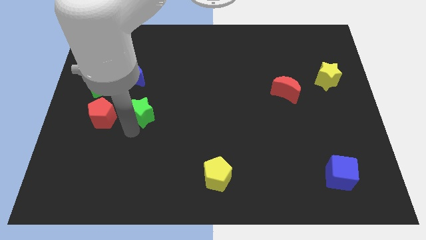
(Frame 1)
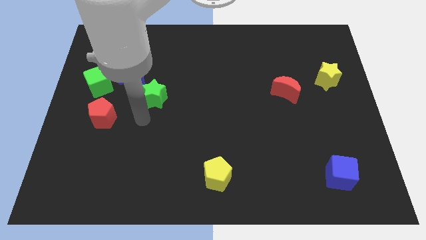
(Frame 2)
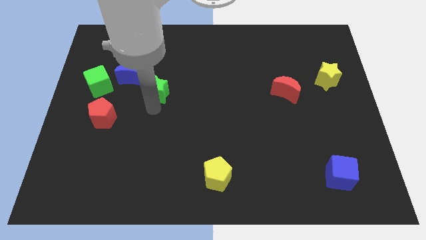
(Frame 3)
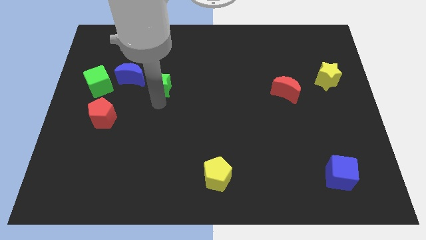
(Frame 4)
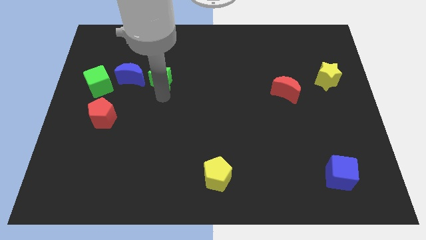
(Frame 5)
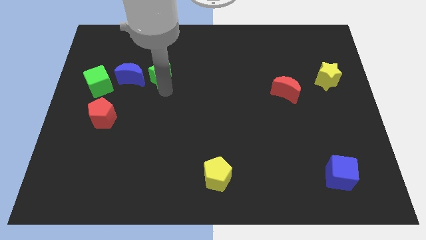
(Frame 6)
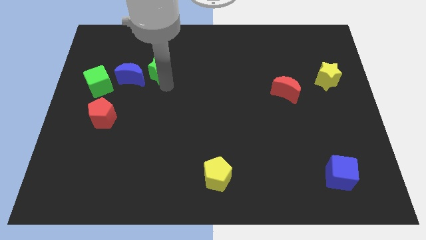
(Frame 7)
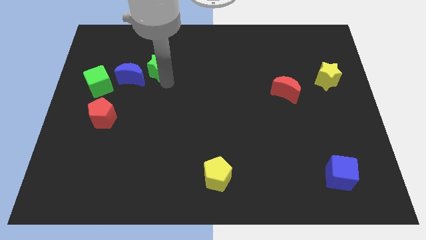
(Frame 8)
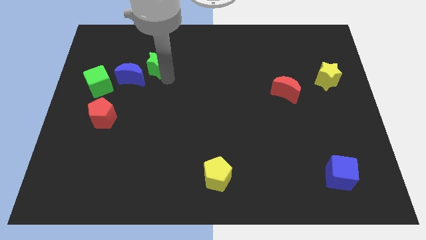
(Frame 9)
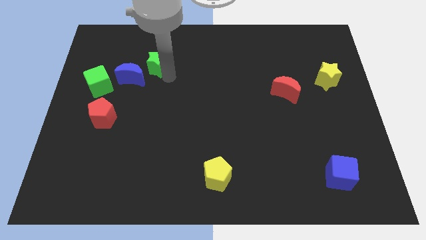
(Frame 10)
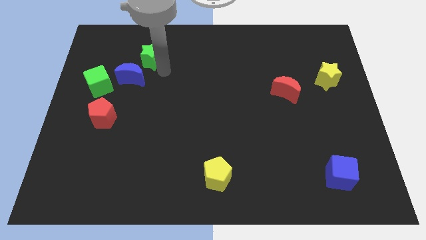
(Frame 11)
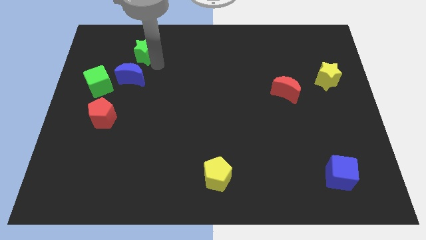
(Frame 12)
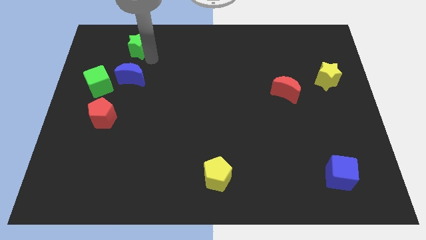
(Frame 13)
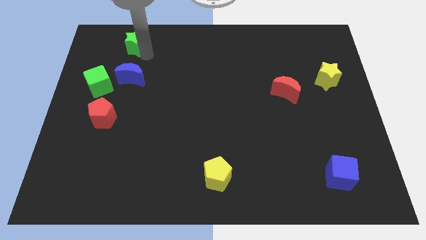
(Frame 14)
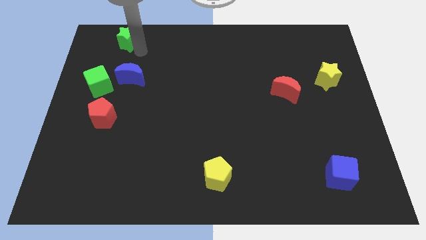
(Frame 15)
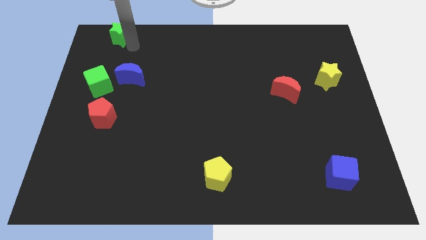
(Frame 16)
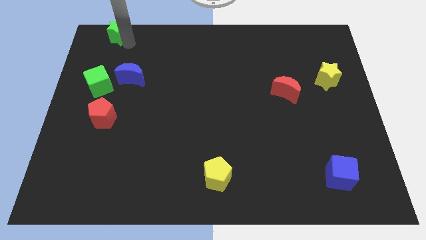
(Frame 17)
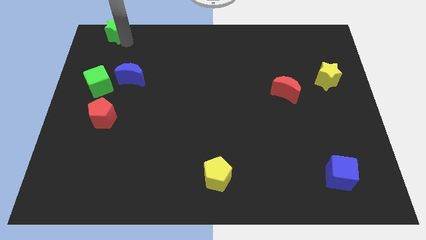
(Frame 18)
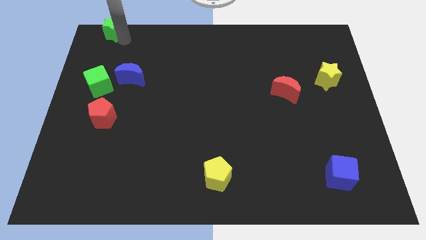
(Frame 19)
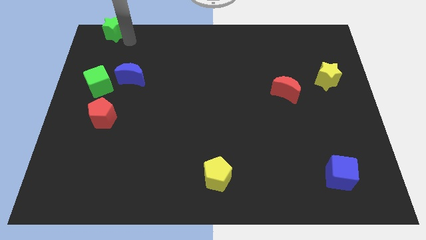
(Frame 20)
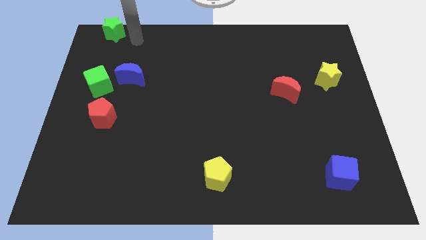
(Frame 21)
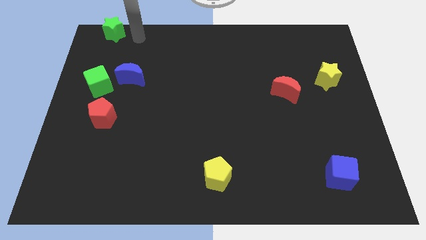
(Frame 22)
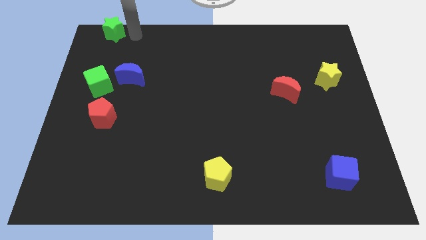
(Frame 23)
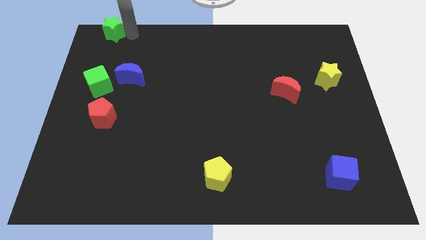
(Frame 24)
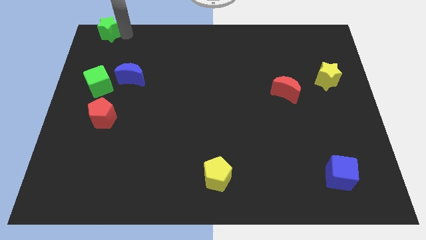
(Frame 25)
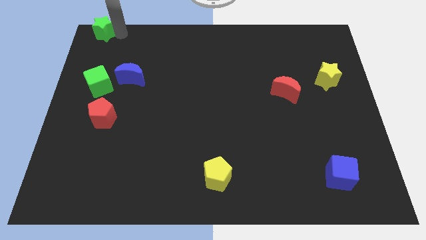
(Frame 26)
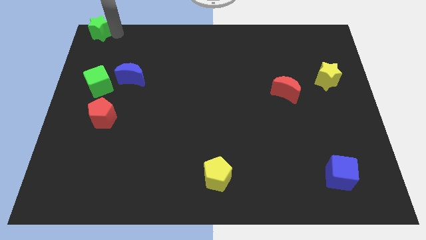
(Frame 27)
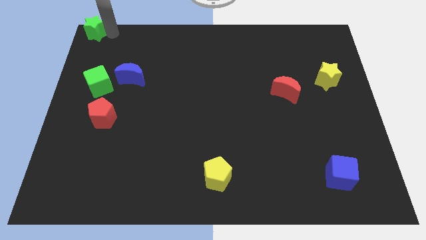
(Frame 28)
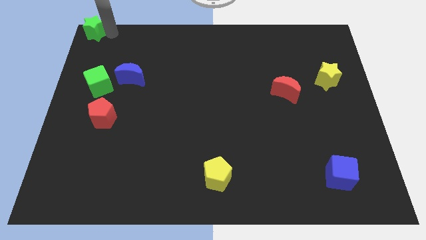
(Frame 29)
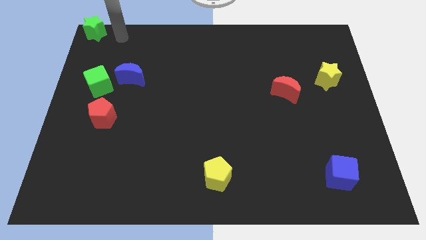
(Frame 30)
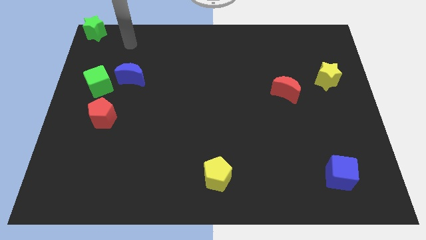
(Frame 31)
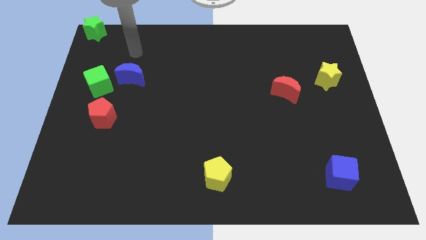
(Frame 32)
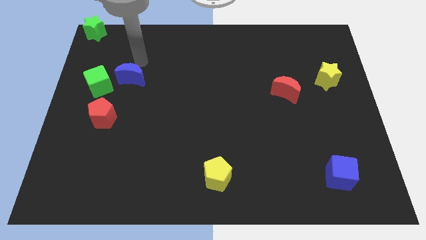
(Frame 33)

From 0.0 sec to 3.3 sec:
push the green star to the top left corner of the board

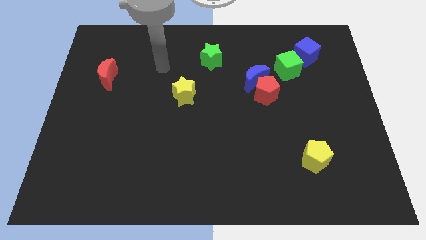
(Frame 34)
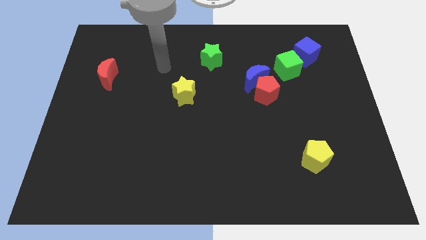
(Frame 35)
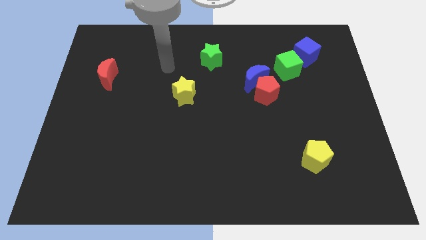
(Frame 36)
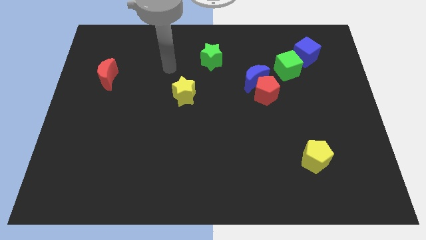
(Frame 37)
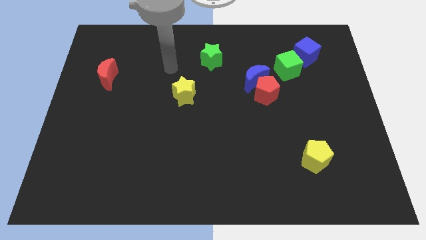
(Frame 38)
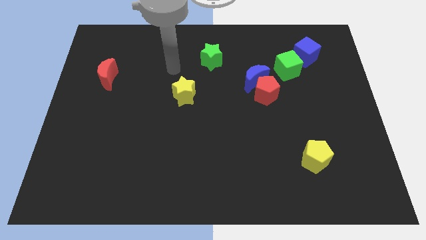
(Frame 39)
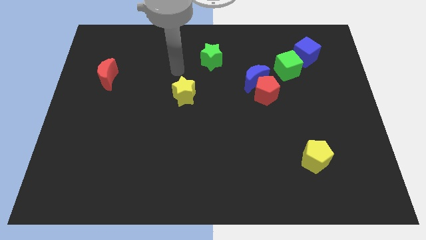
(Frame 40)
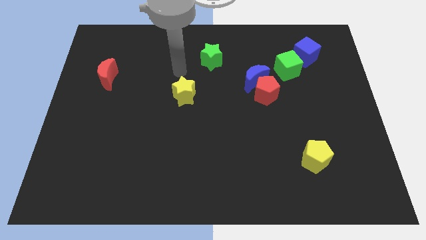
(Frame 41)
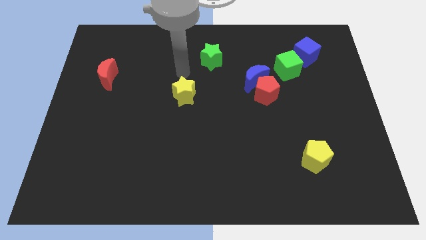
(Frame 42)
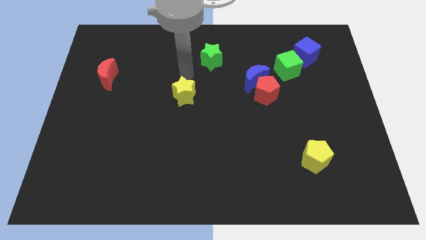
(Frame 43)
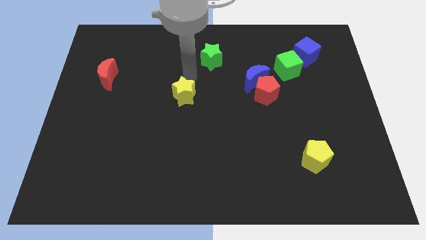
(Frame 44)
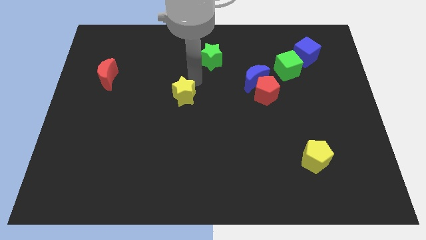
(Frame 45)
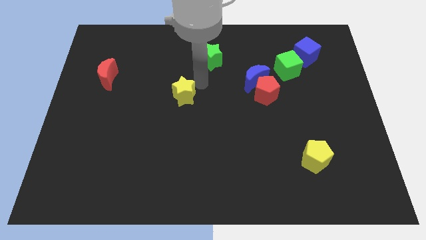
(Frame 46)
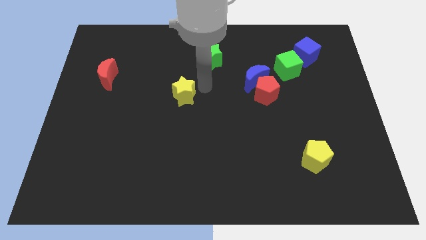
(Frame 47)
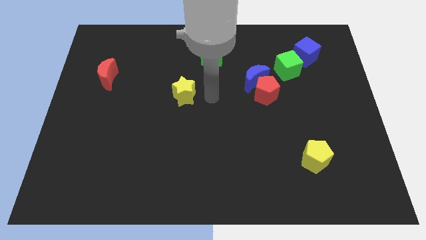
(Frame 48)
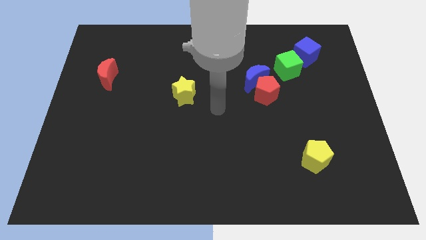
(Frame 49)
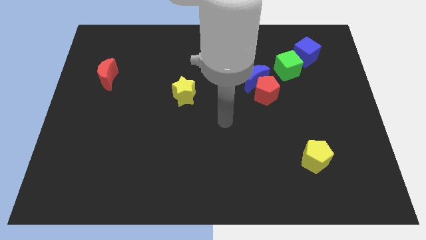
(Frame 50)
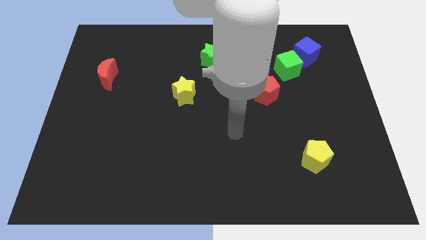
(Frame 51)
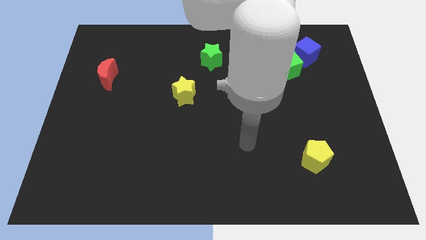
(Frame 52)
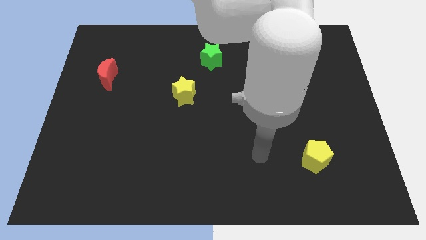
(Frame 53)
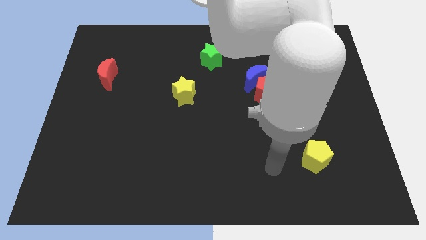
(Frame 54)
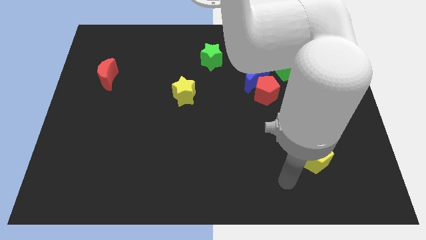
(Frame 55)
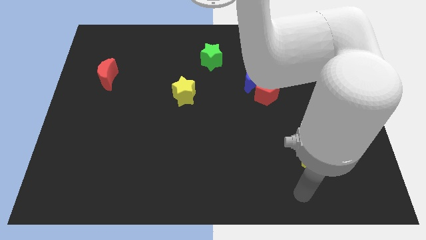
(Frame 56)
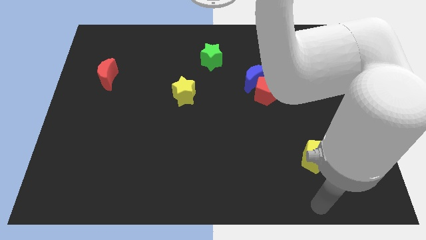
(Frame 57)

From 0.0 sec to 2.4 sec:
move your arm towards the yellow pentagon

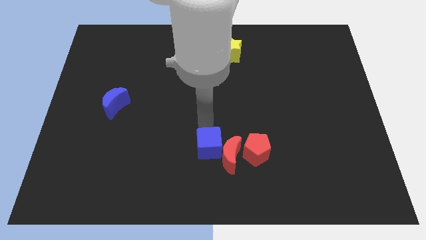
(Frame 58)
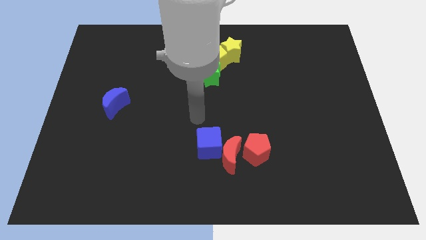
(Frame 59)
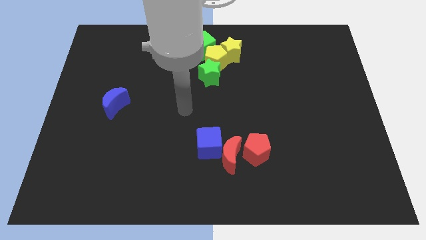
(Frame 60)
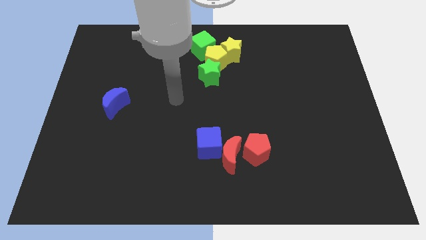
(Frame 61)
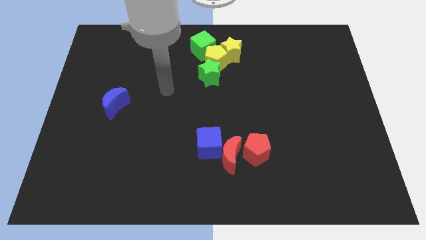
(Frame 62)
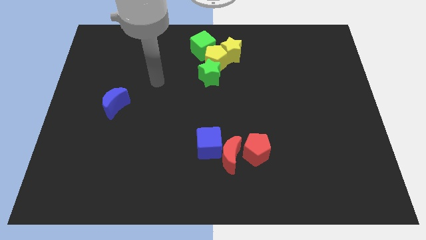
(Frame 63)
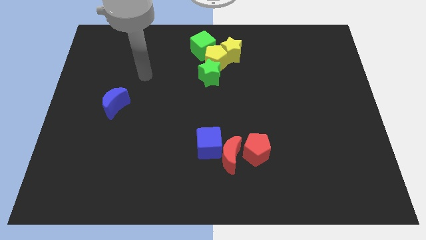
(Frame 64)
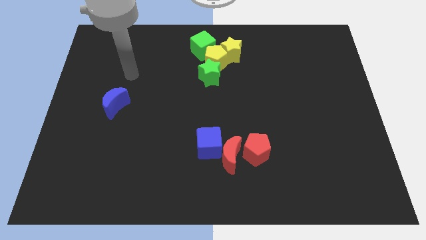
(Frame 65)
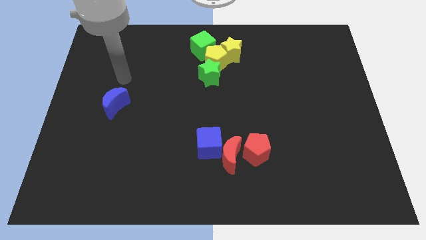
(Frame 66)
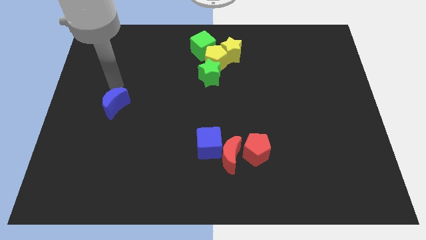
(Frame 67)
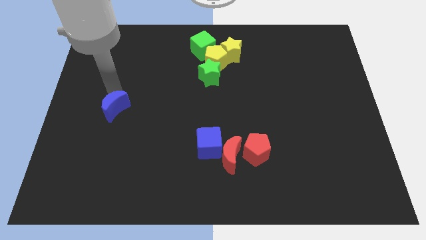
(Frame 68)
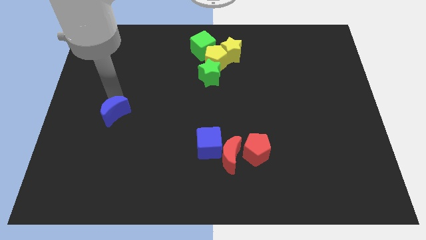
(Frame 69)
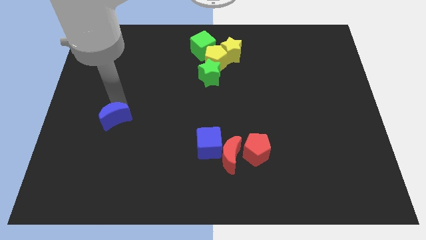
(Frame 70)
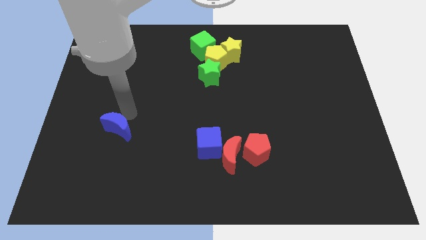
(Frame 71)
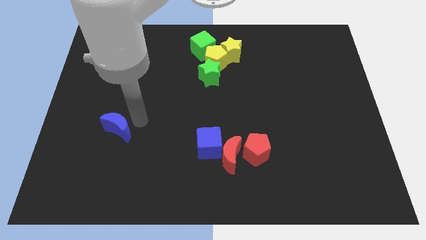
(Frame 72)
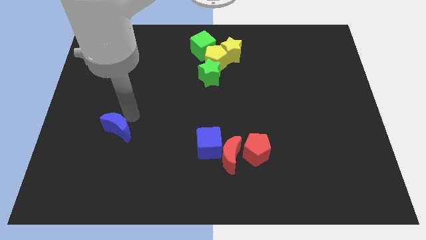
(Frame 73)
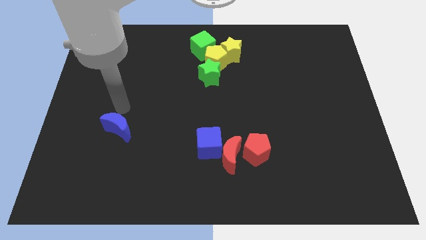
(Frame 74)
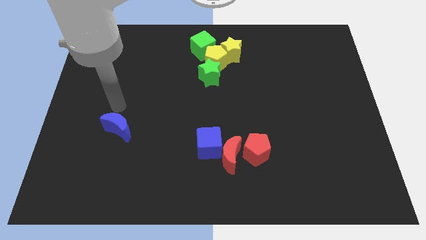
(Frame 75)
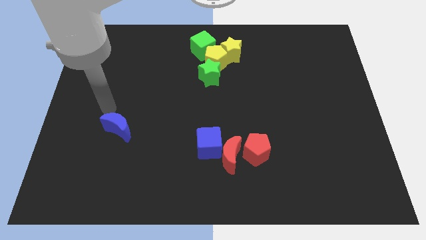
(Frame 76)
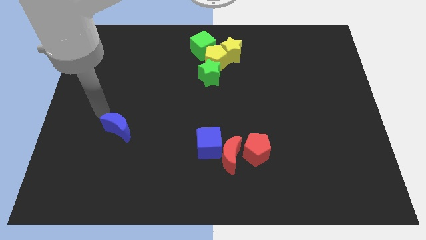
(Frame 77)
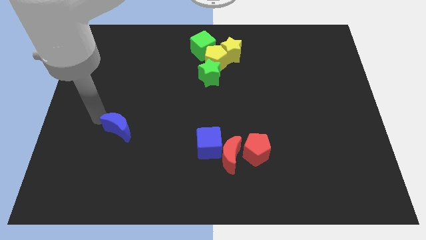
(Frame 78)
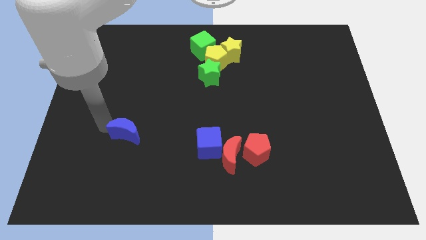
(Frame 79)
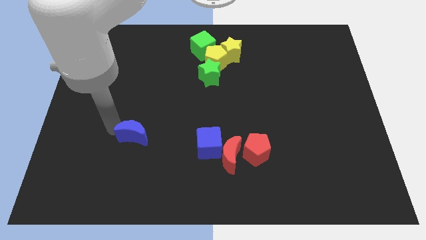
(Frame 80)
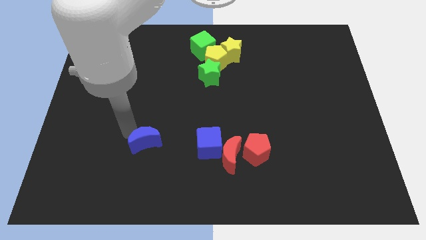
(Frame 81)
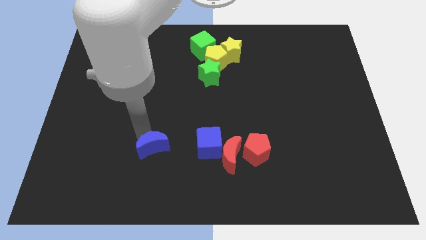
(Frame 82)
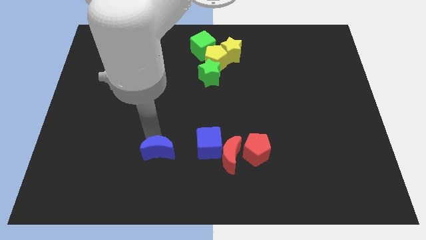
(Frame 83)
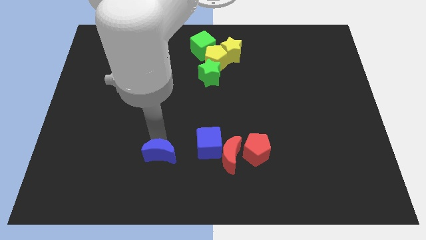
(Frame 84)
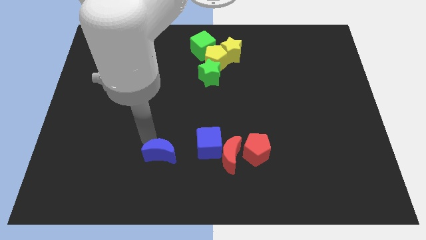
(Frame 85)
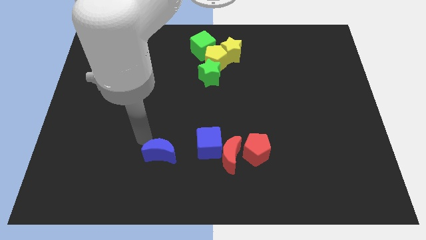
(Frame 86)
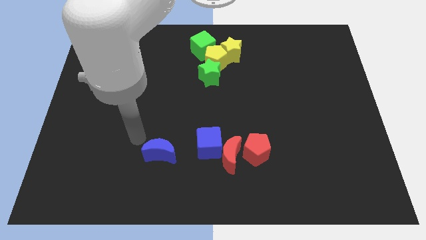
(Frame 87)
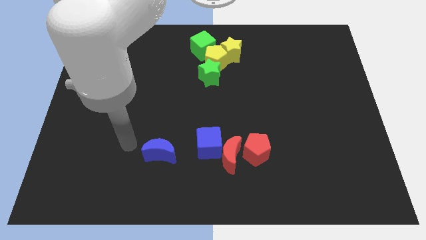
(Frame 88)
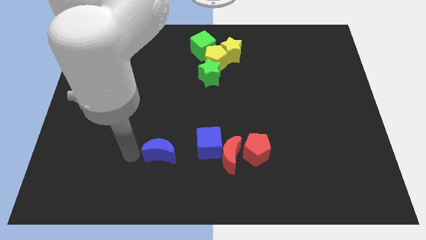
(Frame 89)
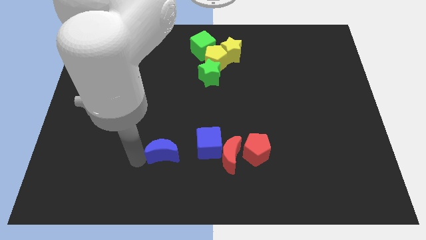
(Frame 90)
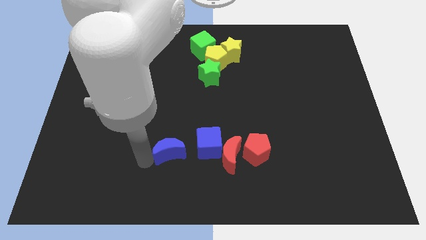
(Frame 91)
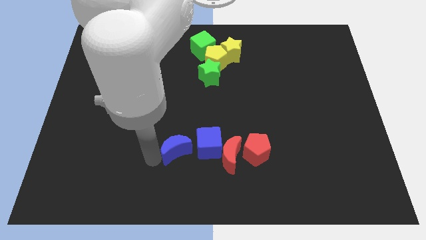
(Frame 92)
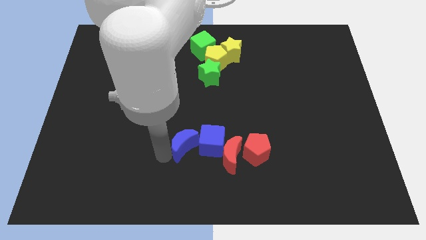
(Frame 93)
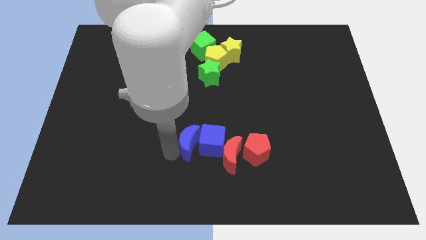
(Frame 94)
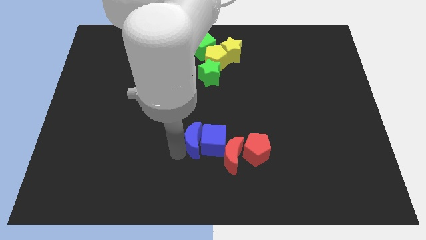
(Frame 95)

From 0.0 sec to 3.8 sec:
move the blue moon left to the blue cube
